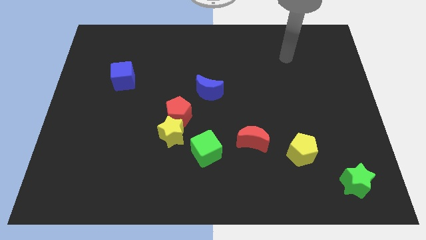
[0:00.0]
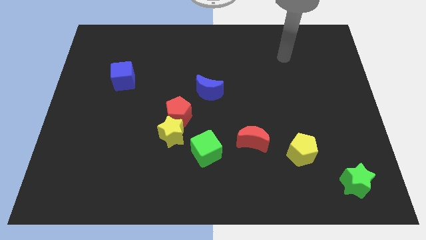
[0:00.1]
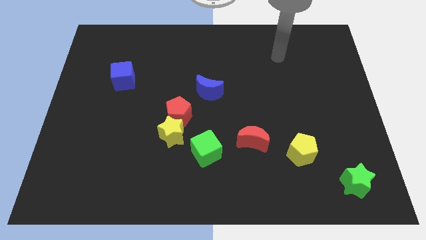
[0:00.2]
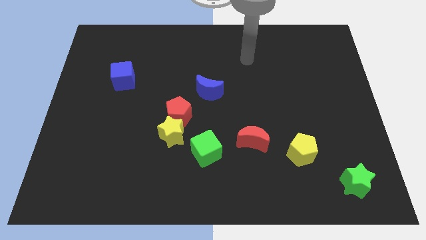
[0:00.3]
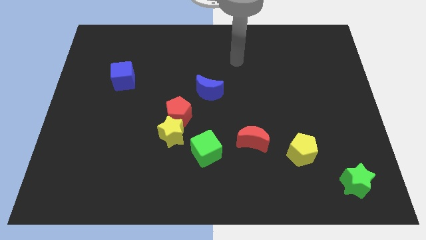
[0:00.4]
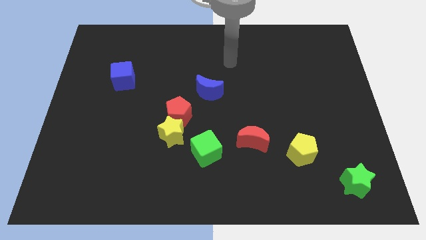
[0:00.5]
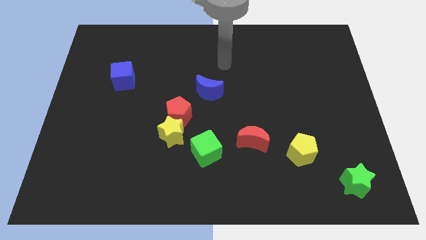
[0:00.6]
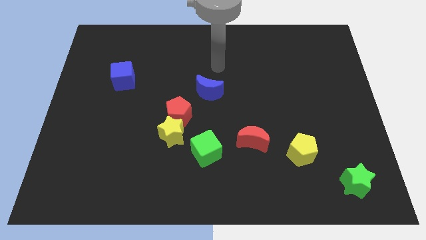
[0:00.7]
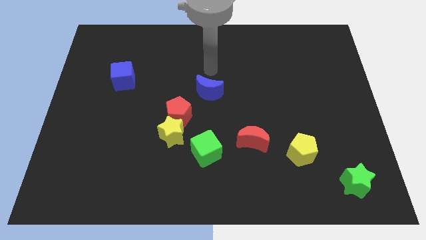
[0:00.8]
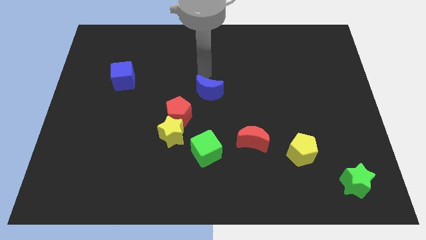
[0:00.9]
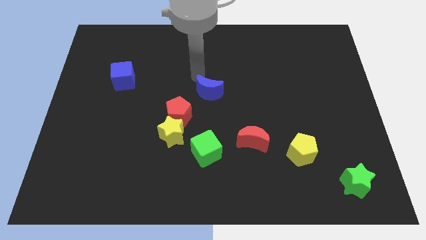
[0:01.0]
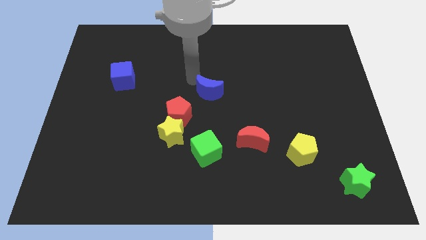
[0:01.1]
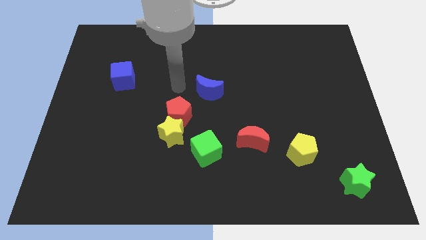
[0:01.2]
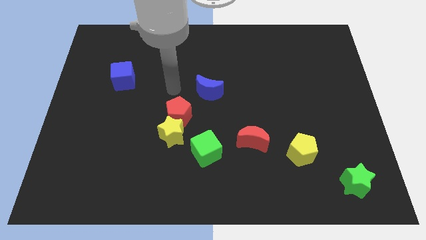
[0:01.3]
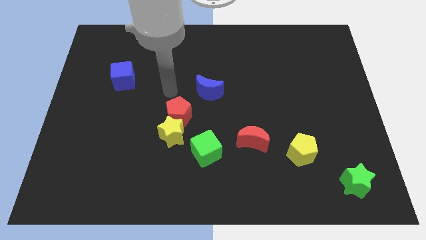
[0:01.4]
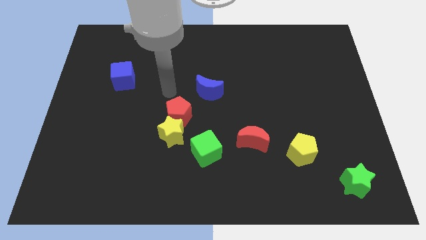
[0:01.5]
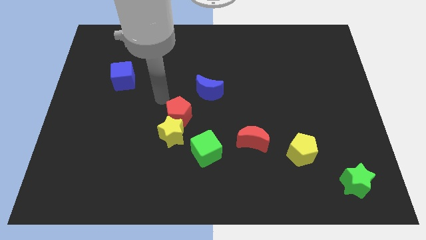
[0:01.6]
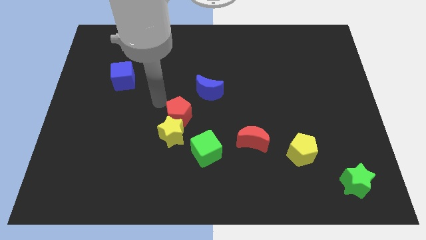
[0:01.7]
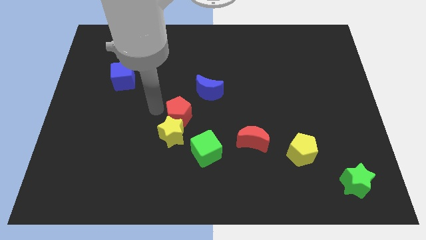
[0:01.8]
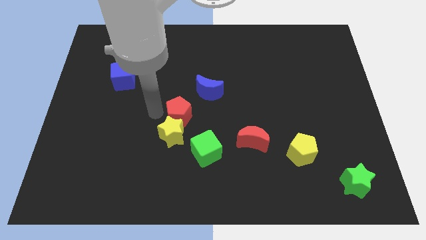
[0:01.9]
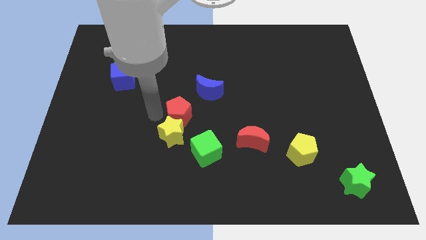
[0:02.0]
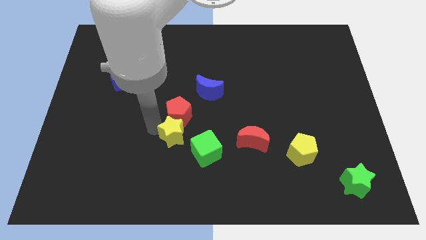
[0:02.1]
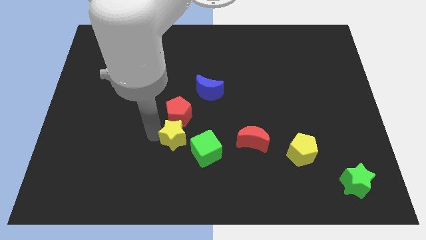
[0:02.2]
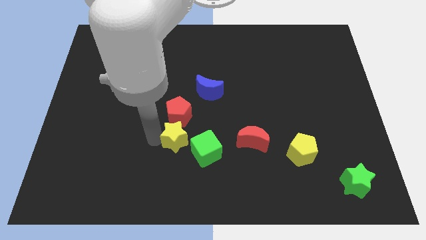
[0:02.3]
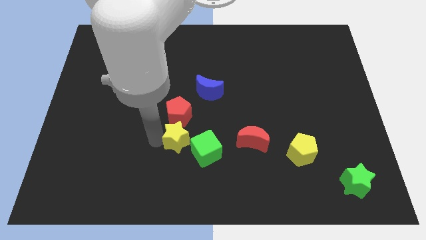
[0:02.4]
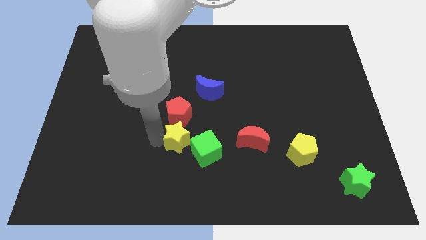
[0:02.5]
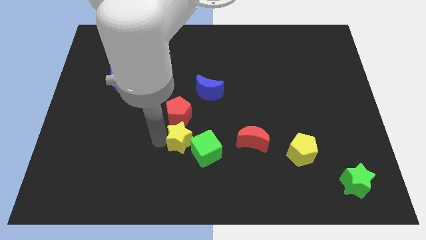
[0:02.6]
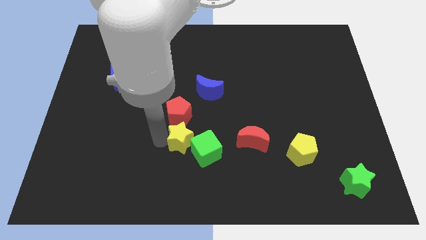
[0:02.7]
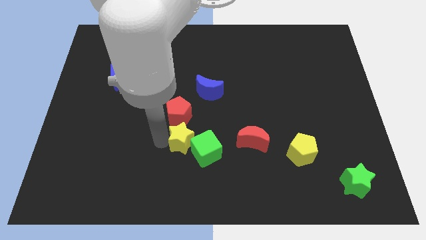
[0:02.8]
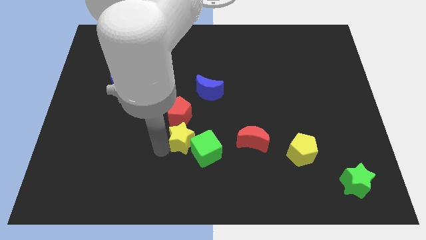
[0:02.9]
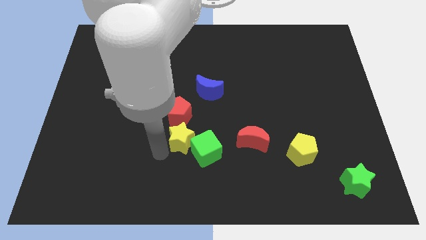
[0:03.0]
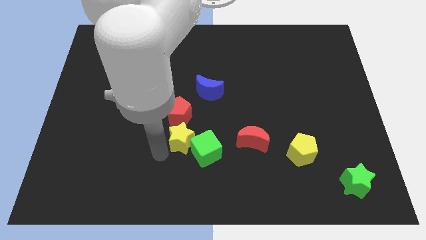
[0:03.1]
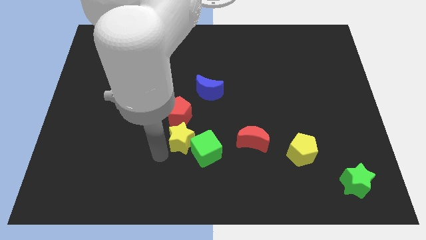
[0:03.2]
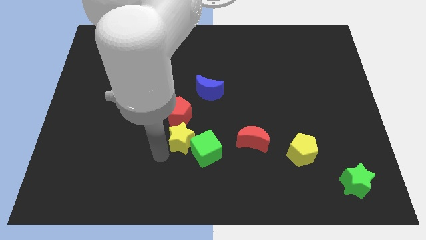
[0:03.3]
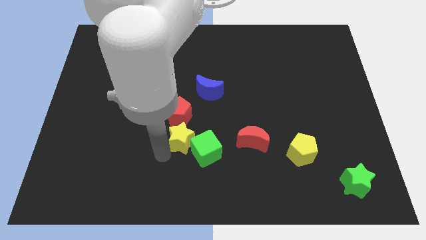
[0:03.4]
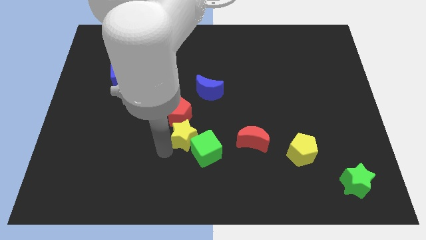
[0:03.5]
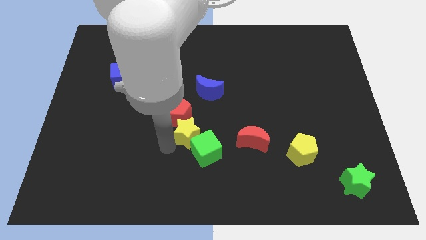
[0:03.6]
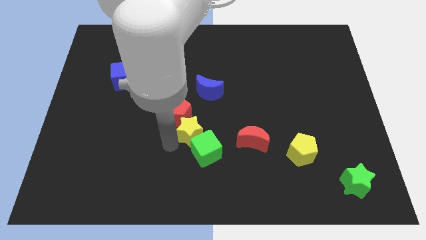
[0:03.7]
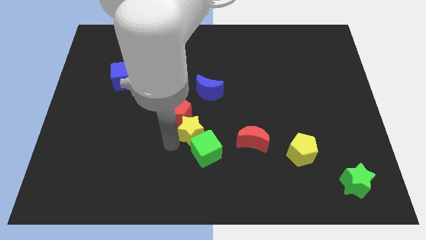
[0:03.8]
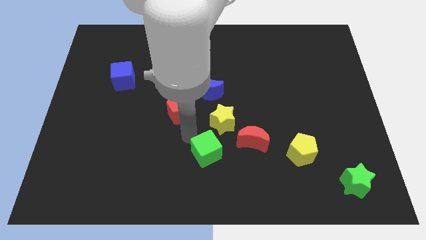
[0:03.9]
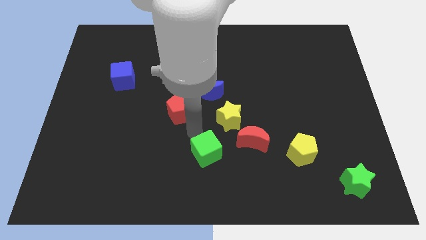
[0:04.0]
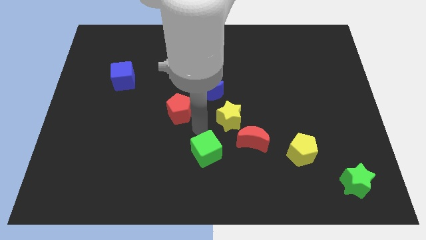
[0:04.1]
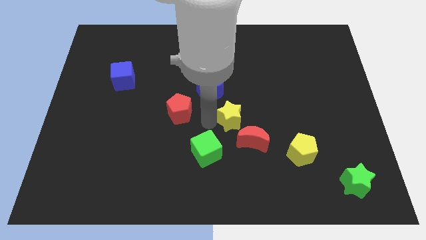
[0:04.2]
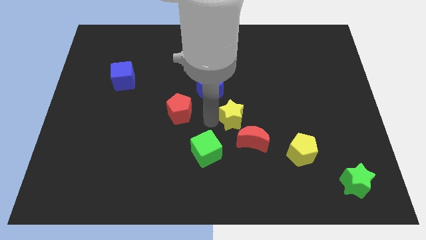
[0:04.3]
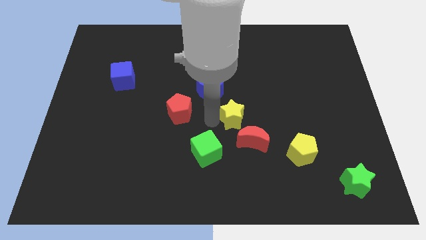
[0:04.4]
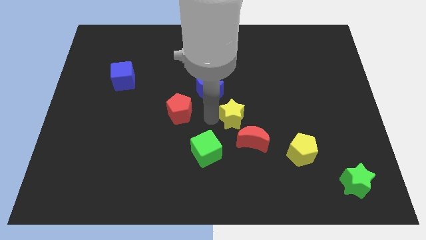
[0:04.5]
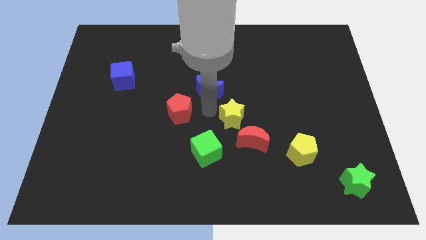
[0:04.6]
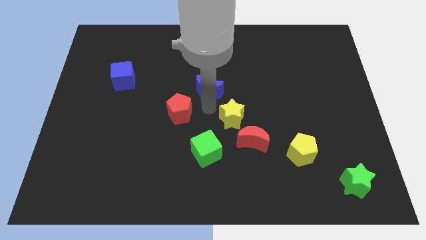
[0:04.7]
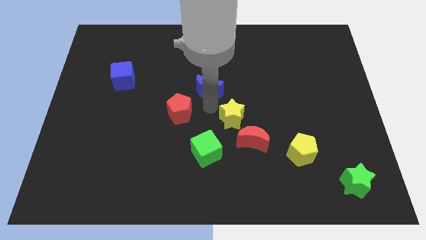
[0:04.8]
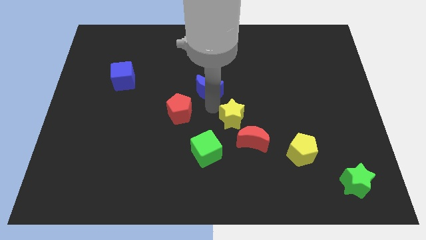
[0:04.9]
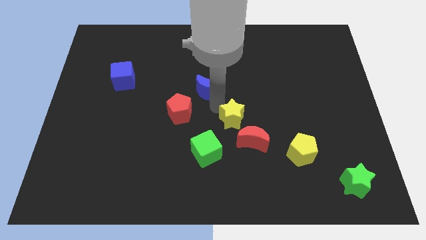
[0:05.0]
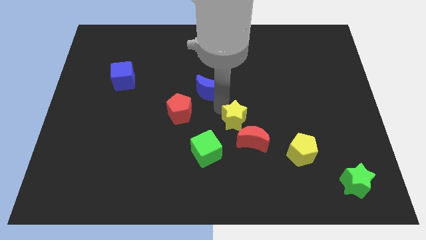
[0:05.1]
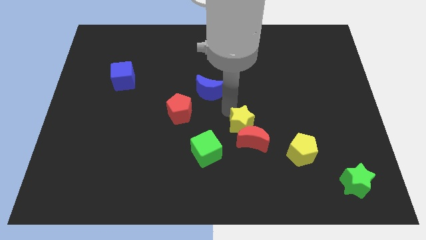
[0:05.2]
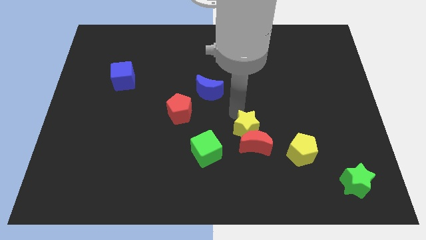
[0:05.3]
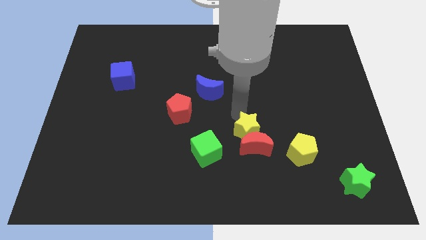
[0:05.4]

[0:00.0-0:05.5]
push the yellow star towards the red moon

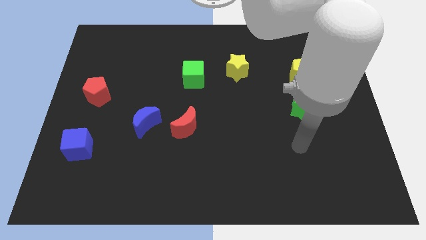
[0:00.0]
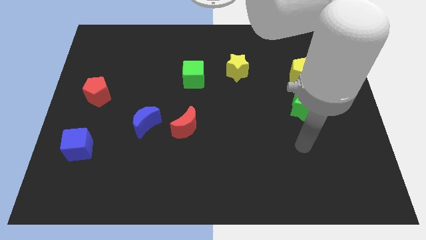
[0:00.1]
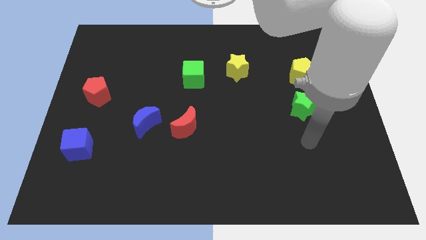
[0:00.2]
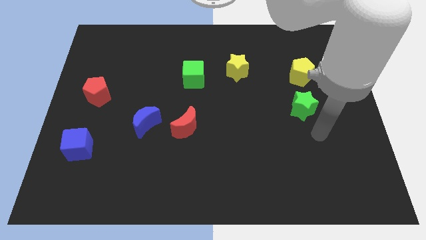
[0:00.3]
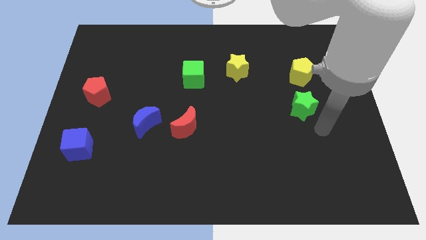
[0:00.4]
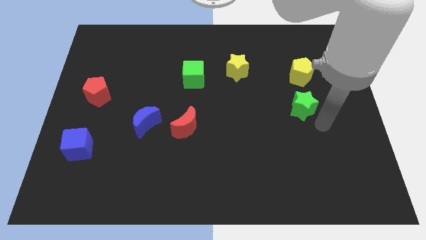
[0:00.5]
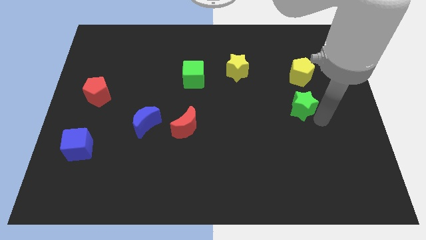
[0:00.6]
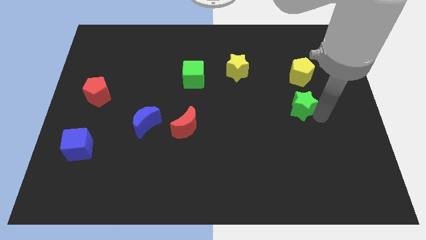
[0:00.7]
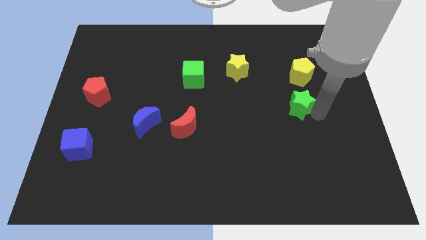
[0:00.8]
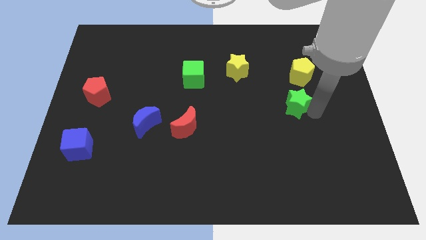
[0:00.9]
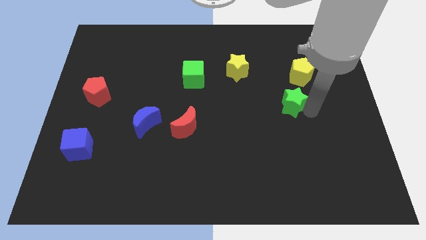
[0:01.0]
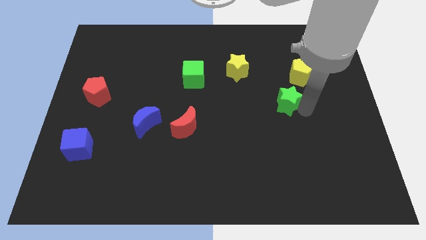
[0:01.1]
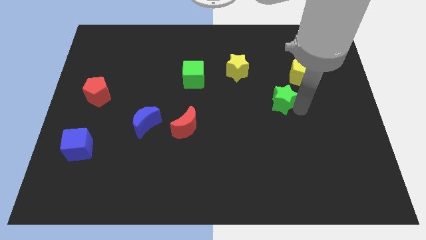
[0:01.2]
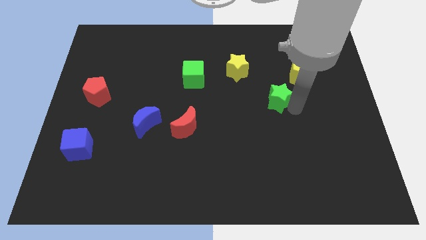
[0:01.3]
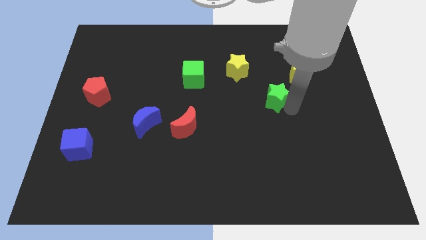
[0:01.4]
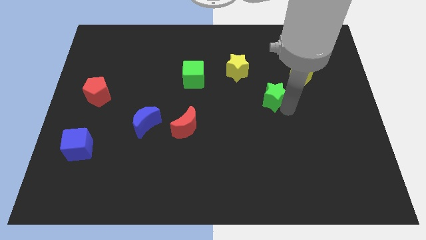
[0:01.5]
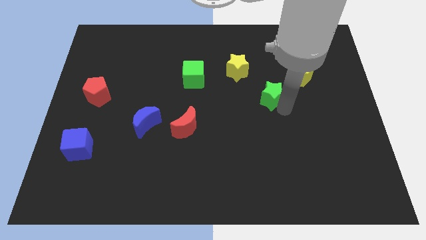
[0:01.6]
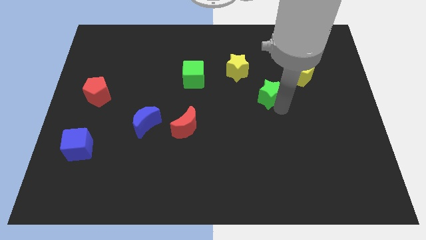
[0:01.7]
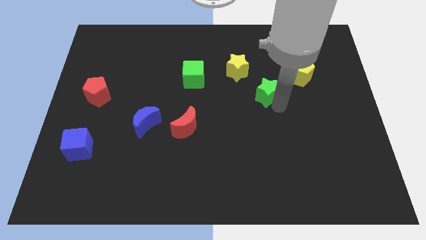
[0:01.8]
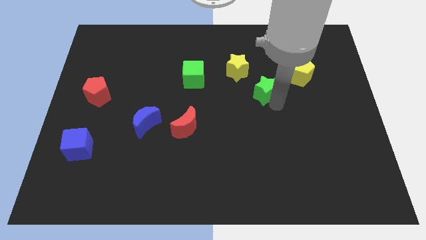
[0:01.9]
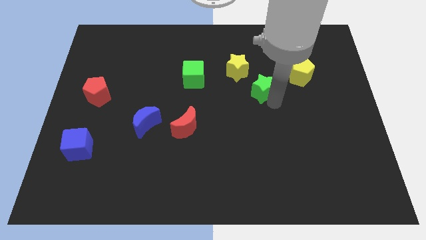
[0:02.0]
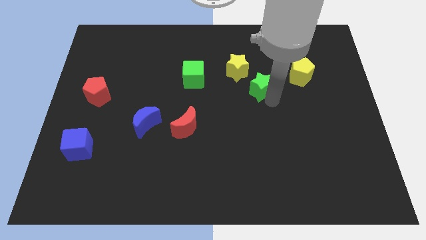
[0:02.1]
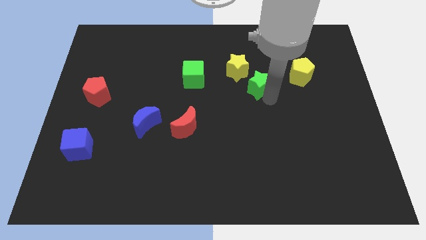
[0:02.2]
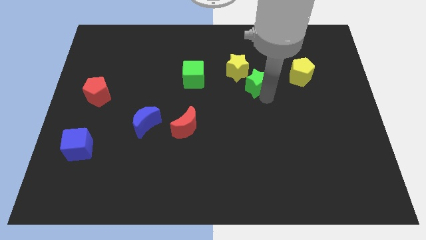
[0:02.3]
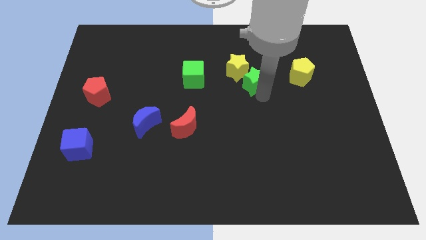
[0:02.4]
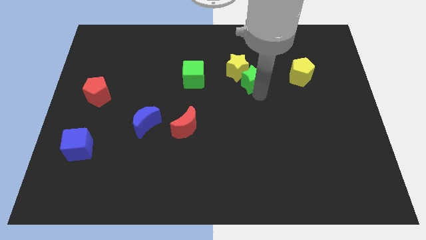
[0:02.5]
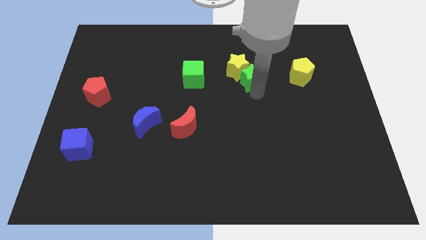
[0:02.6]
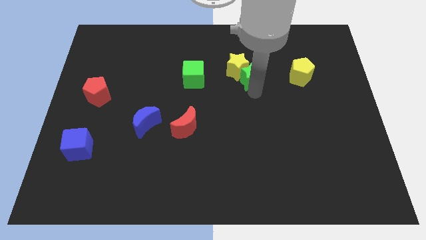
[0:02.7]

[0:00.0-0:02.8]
push the green star to the yellow star

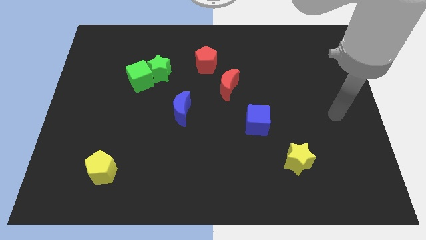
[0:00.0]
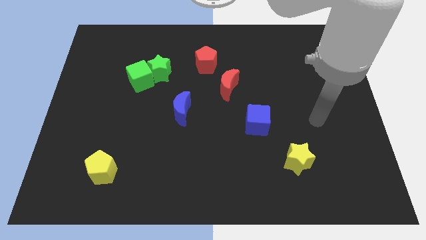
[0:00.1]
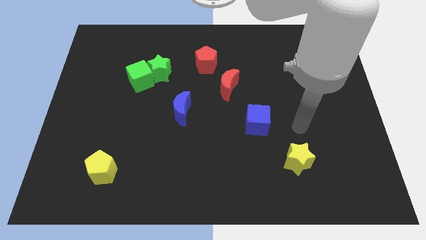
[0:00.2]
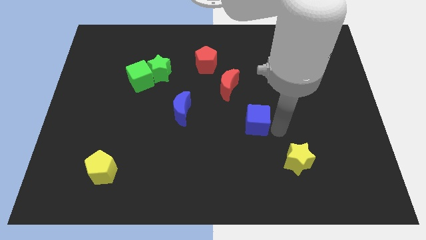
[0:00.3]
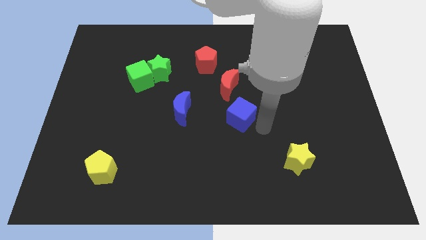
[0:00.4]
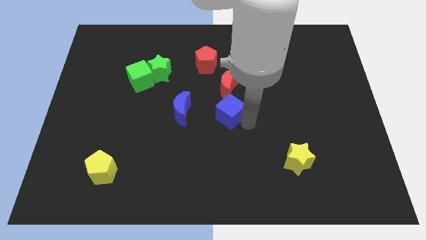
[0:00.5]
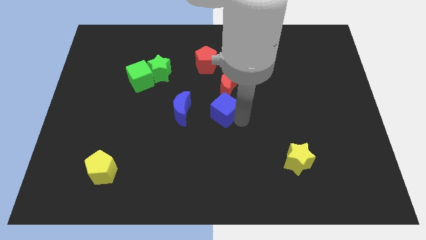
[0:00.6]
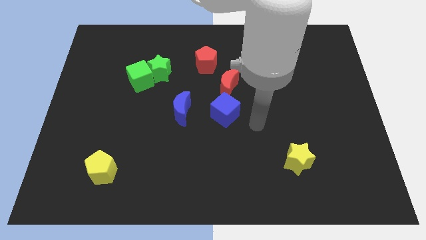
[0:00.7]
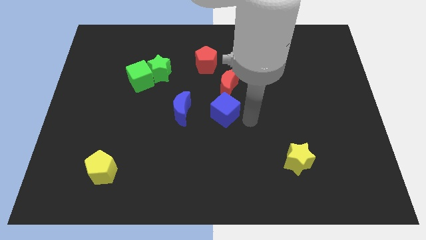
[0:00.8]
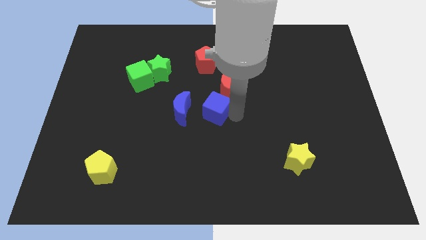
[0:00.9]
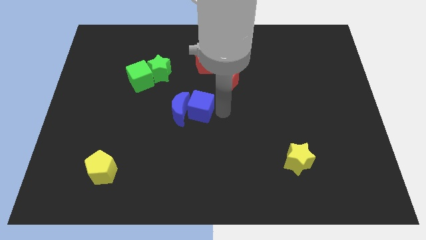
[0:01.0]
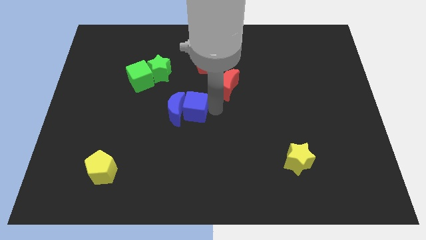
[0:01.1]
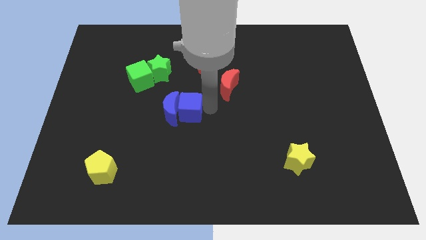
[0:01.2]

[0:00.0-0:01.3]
slide the blue cube close to the blue moon
